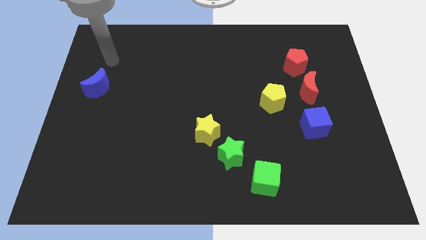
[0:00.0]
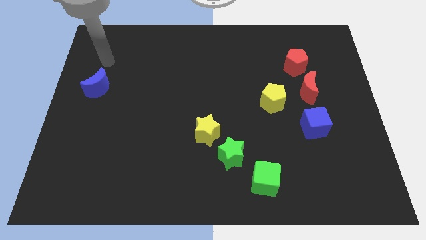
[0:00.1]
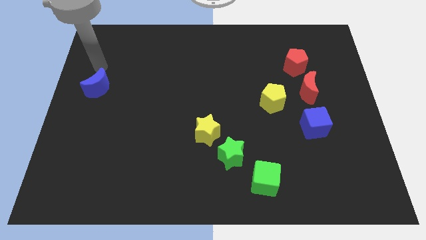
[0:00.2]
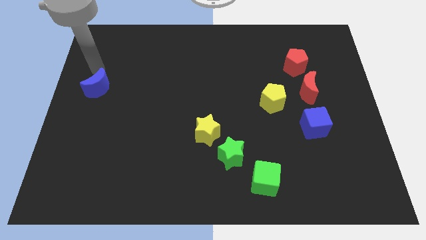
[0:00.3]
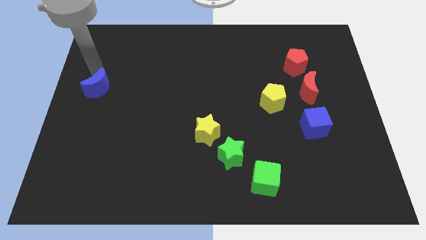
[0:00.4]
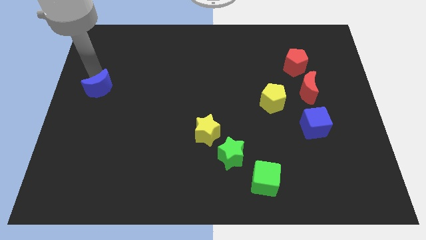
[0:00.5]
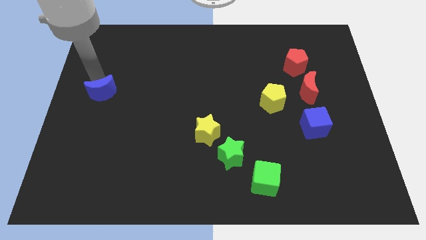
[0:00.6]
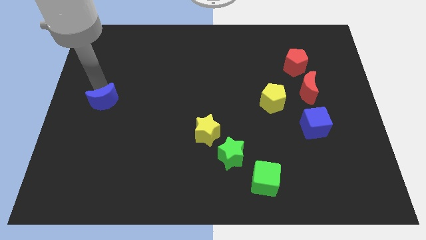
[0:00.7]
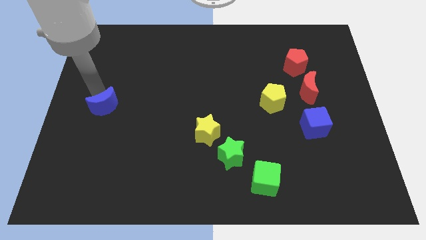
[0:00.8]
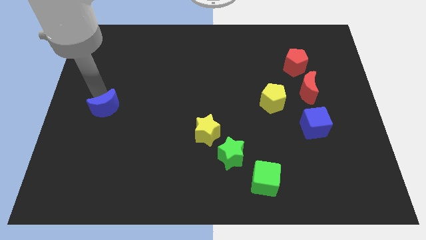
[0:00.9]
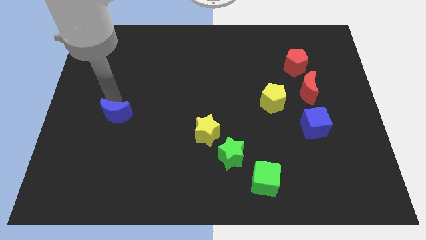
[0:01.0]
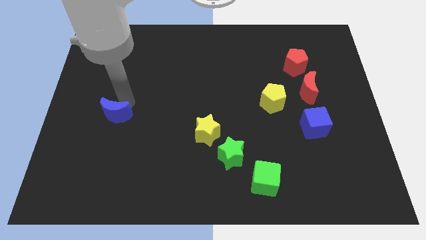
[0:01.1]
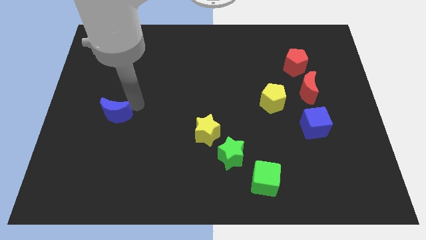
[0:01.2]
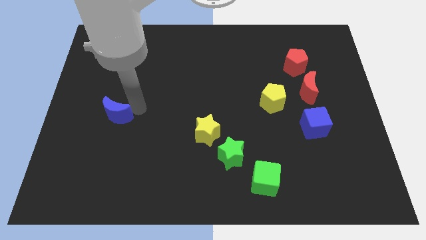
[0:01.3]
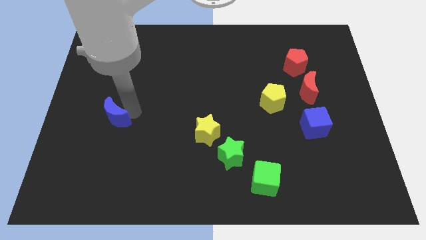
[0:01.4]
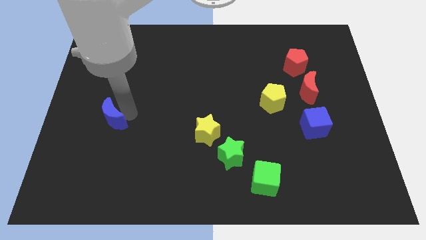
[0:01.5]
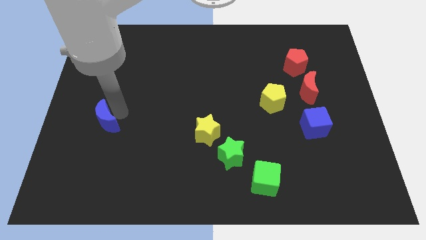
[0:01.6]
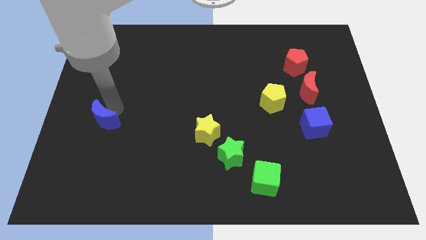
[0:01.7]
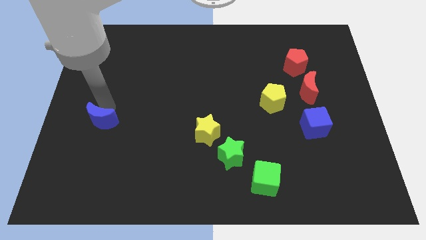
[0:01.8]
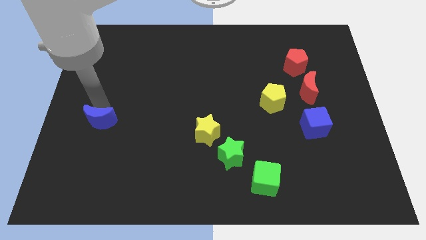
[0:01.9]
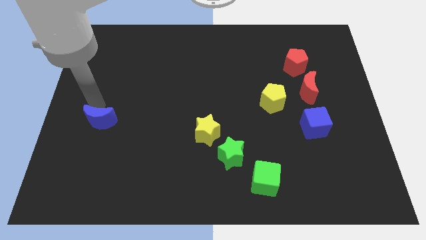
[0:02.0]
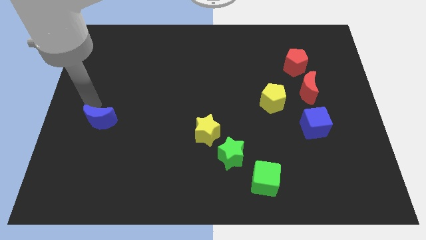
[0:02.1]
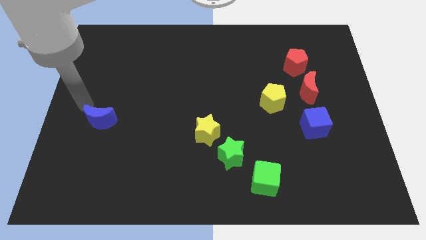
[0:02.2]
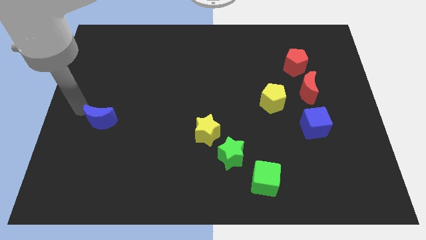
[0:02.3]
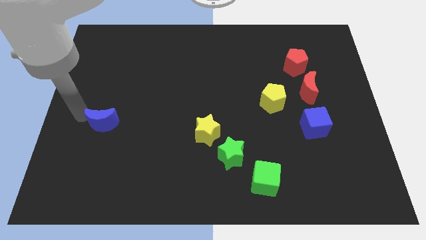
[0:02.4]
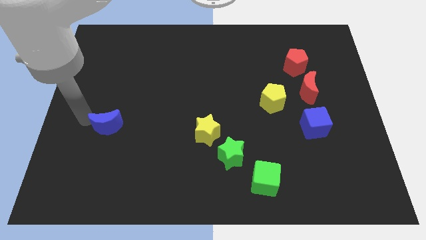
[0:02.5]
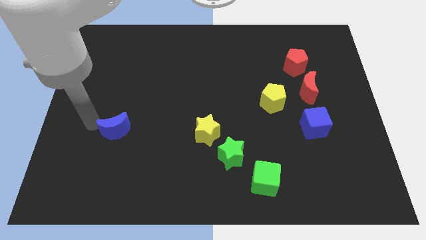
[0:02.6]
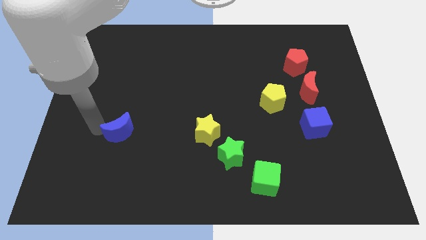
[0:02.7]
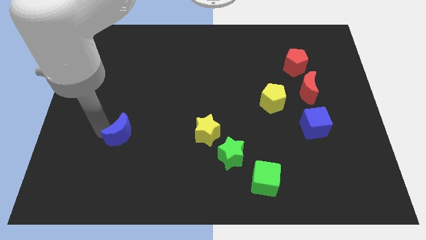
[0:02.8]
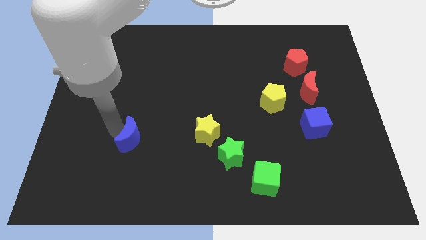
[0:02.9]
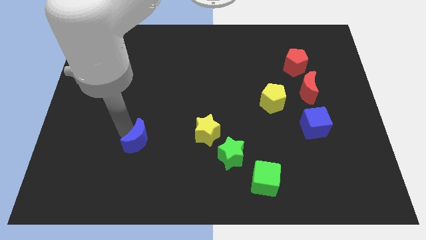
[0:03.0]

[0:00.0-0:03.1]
move the blue moon horizontally to the left side of the yellow star

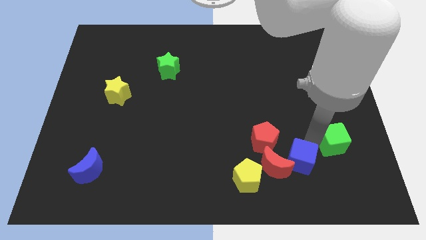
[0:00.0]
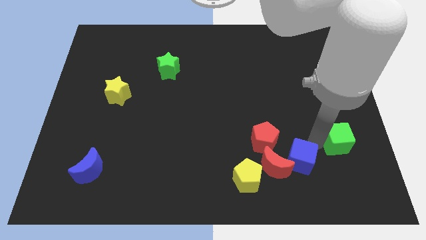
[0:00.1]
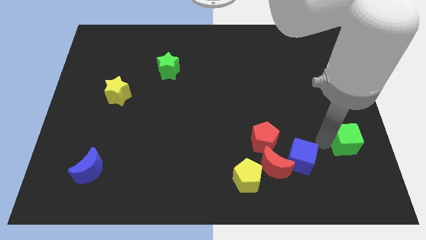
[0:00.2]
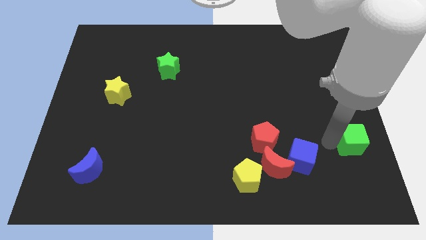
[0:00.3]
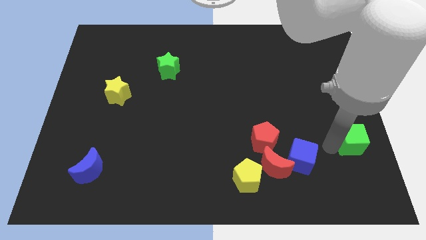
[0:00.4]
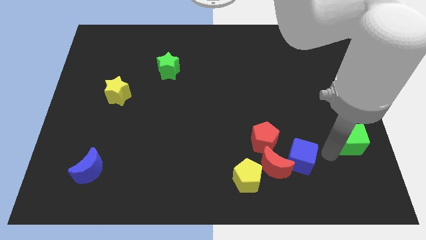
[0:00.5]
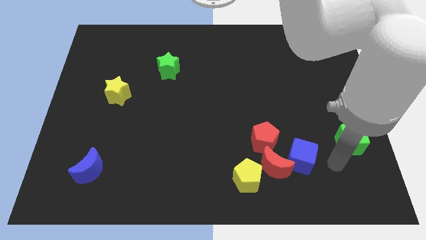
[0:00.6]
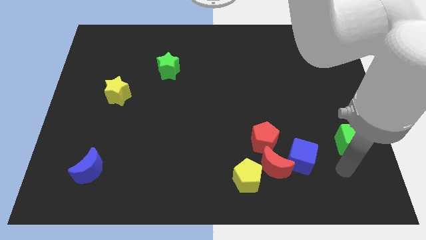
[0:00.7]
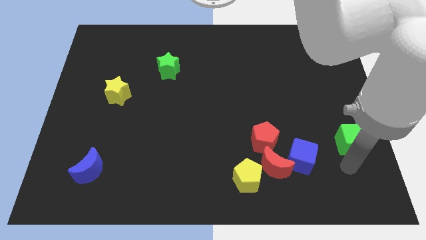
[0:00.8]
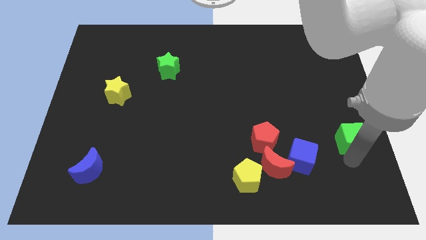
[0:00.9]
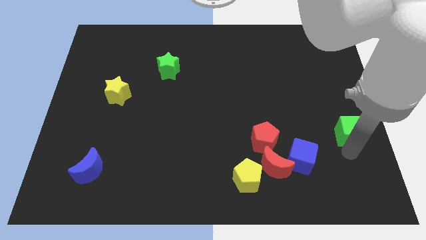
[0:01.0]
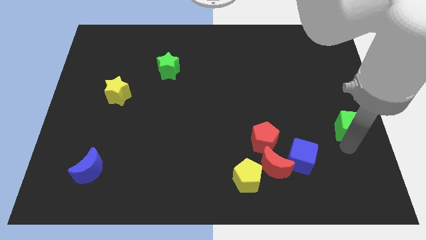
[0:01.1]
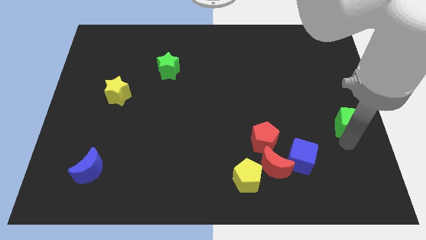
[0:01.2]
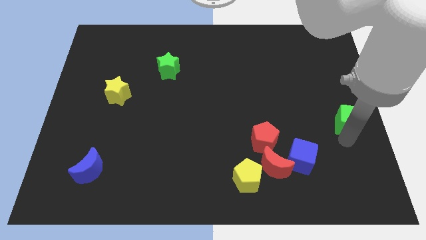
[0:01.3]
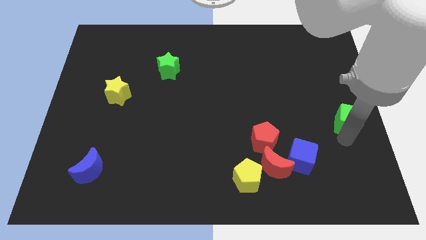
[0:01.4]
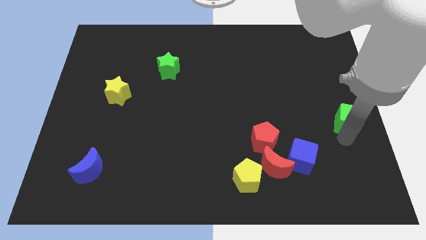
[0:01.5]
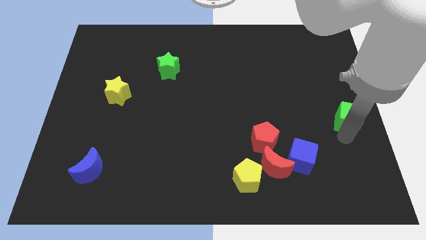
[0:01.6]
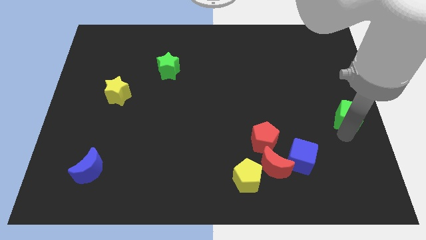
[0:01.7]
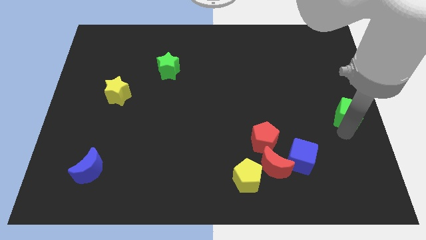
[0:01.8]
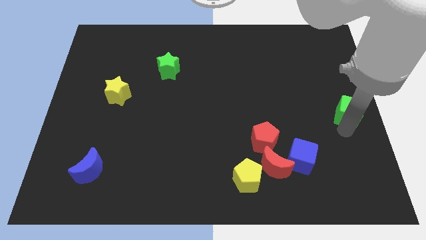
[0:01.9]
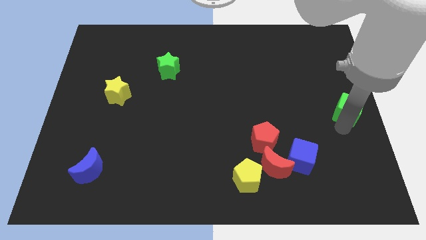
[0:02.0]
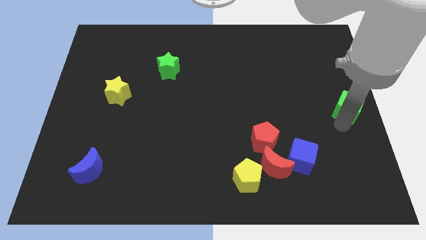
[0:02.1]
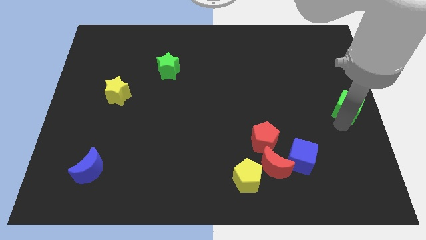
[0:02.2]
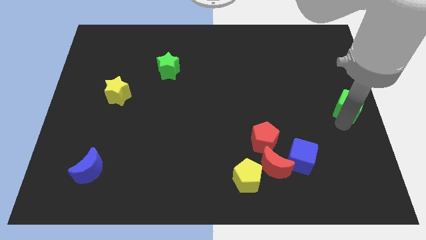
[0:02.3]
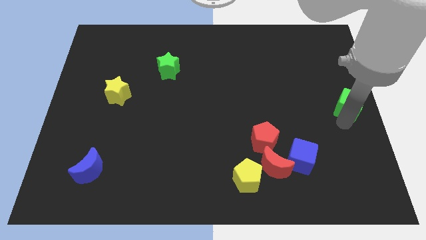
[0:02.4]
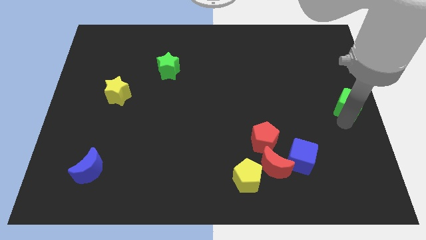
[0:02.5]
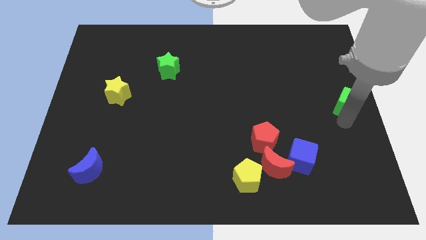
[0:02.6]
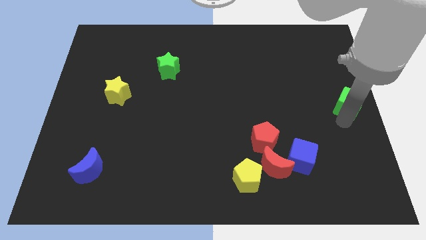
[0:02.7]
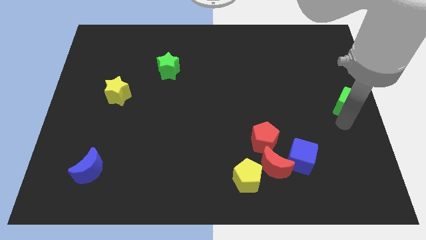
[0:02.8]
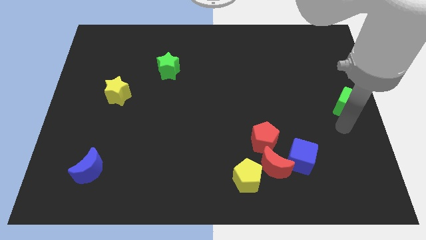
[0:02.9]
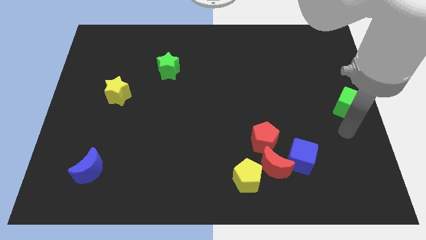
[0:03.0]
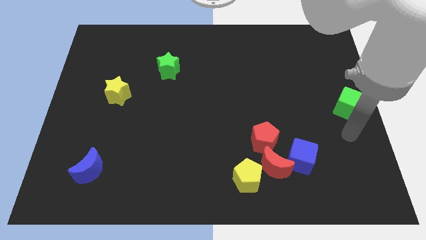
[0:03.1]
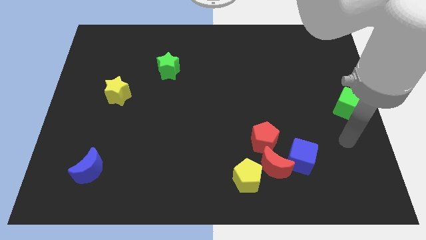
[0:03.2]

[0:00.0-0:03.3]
separate the green cube from the group of blocks

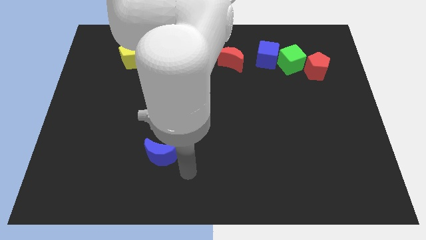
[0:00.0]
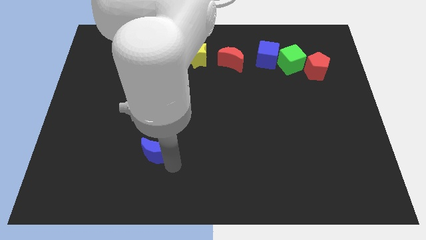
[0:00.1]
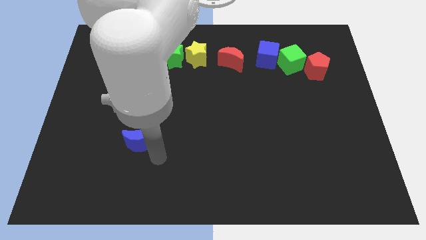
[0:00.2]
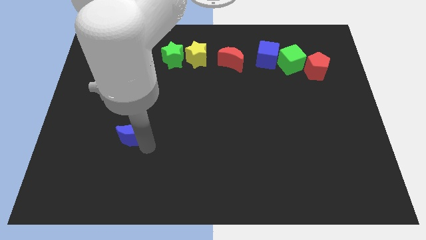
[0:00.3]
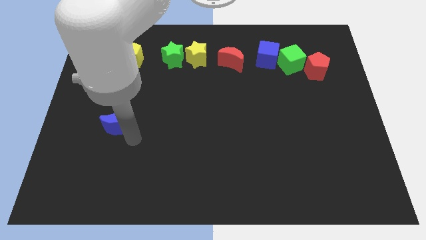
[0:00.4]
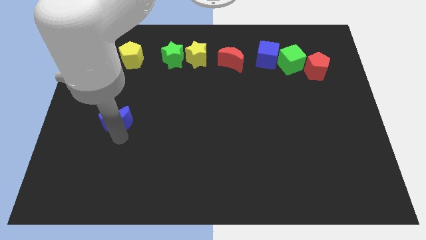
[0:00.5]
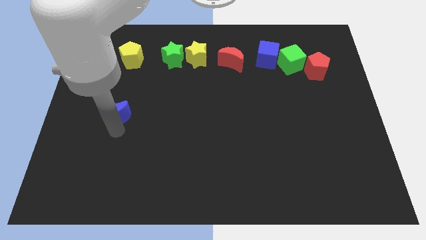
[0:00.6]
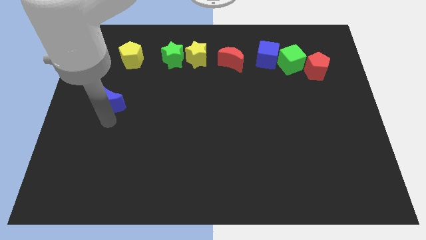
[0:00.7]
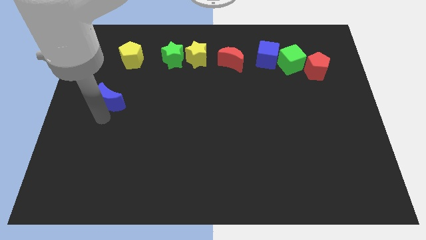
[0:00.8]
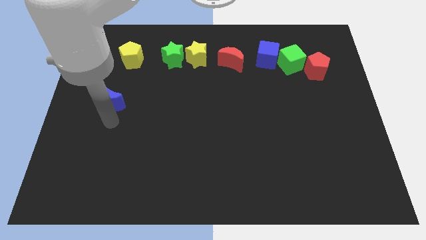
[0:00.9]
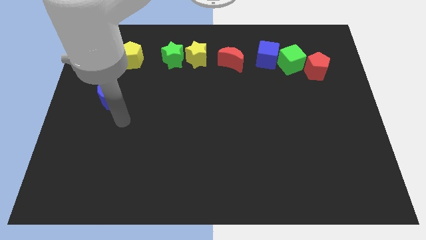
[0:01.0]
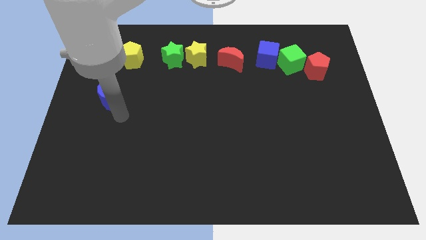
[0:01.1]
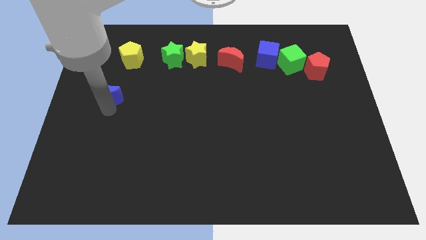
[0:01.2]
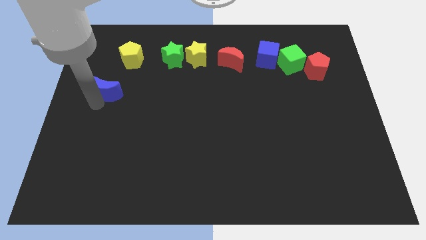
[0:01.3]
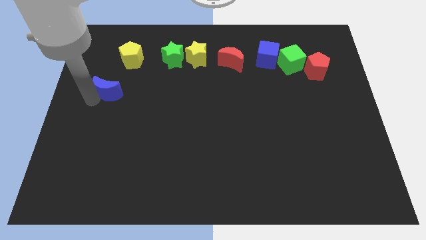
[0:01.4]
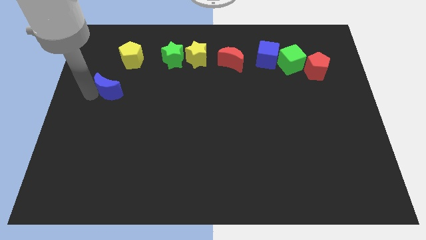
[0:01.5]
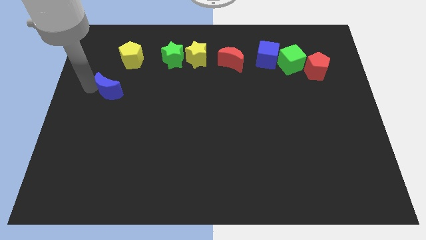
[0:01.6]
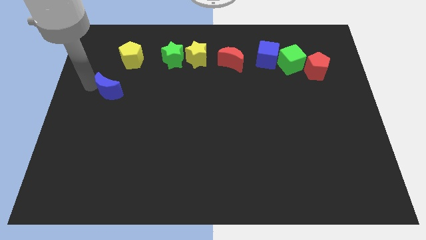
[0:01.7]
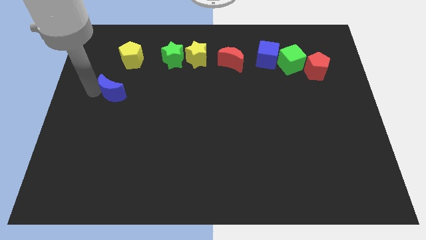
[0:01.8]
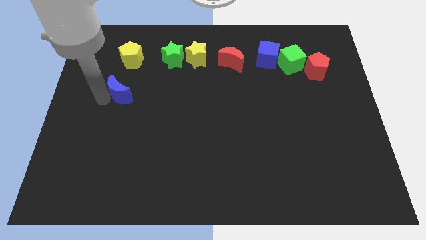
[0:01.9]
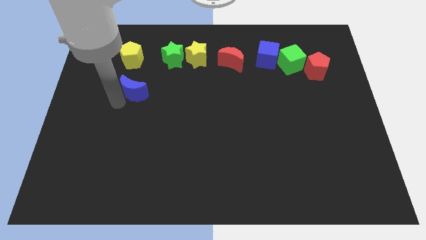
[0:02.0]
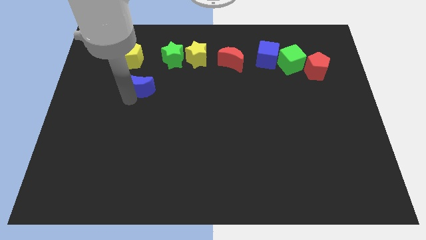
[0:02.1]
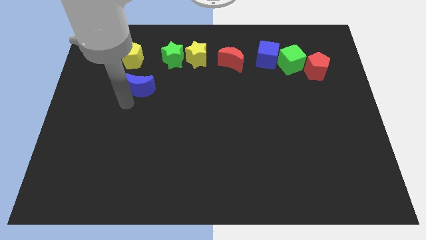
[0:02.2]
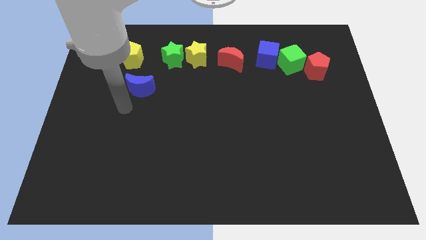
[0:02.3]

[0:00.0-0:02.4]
place the blue moon diagonally below to the yellow pentagon
